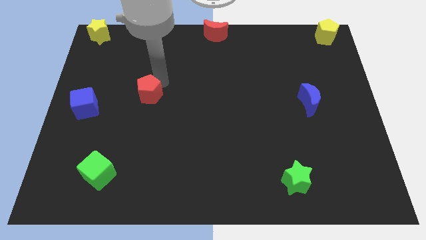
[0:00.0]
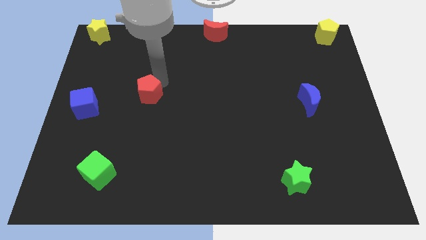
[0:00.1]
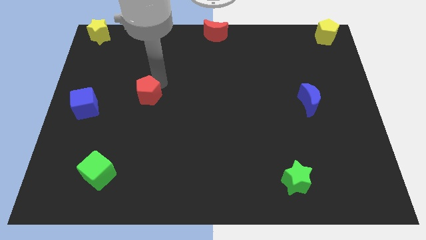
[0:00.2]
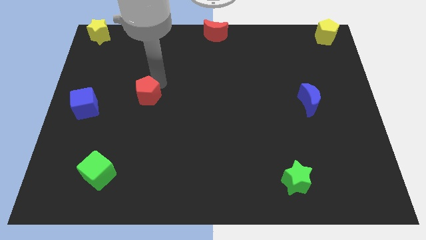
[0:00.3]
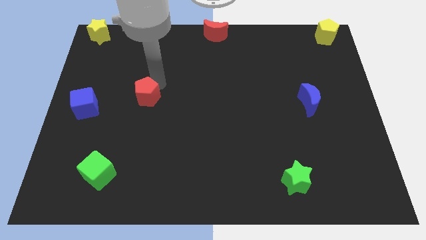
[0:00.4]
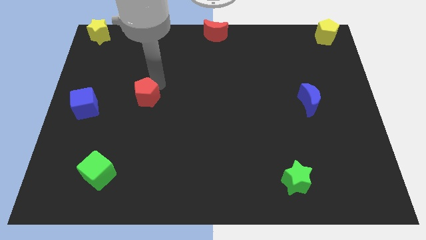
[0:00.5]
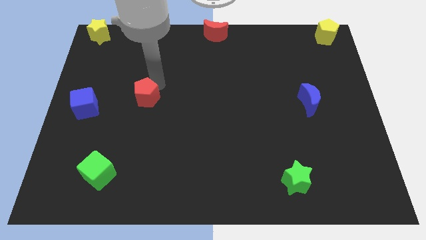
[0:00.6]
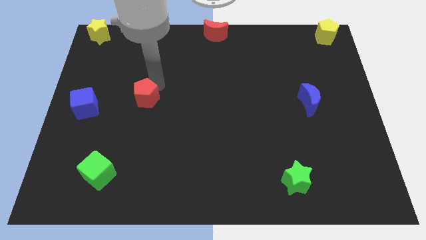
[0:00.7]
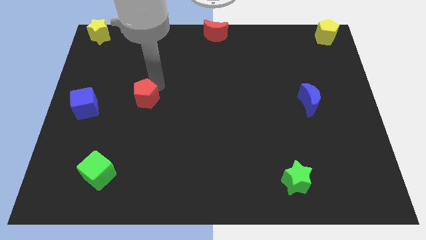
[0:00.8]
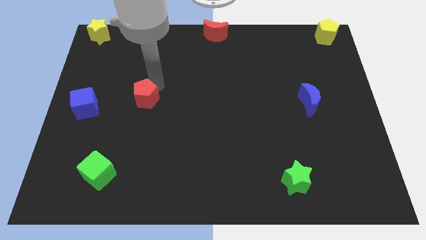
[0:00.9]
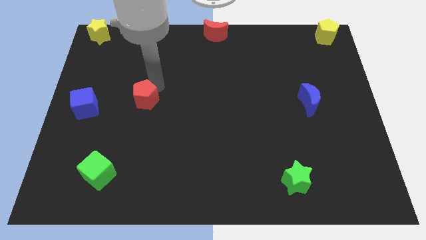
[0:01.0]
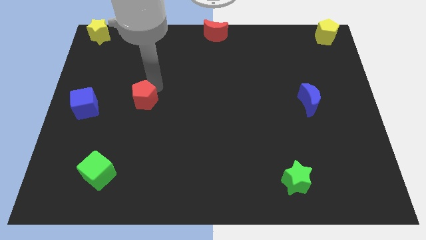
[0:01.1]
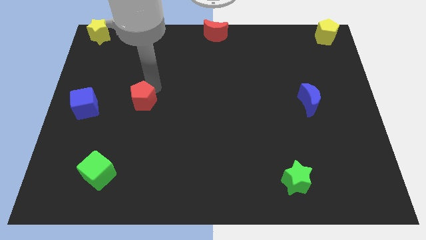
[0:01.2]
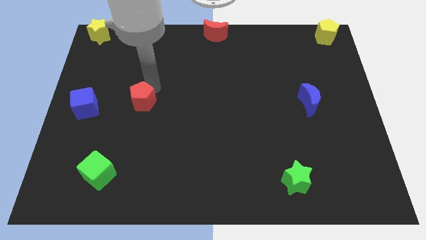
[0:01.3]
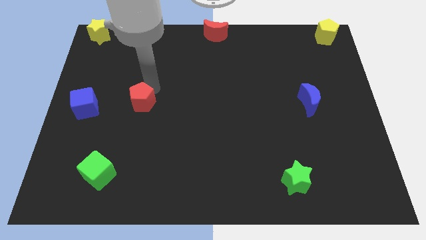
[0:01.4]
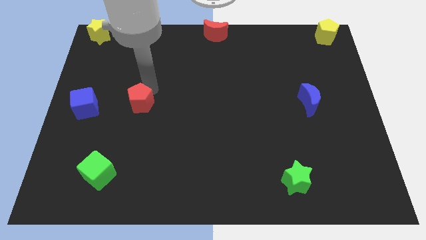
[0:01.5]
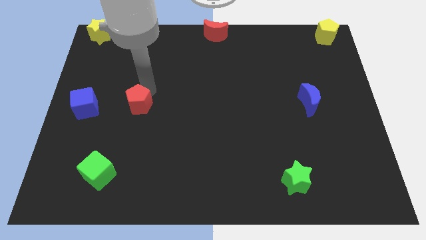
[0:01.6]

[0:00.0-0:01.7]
push the red pentagon to the right of the blue cube

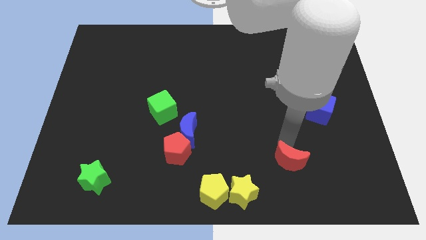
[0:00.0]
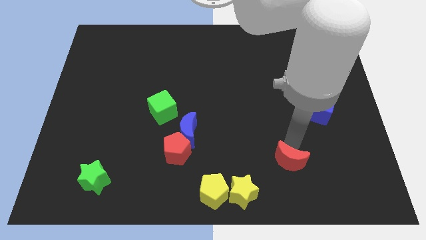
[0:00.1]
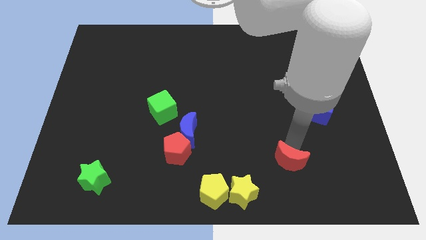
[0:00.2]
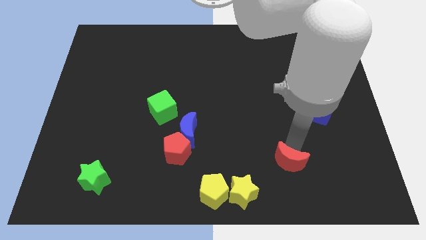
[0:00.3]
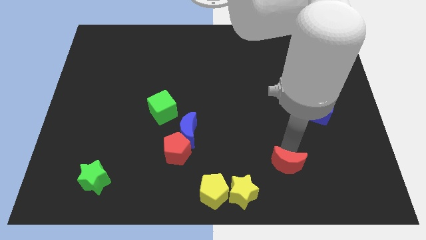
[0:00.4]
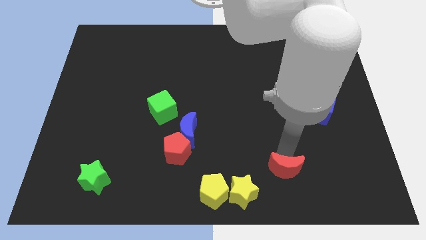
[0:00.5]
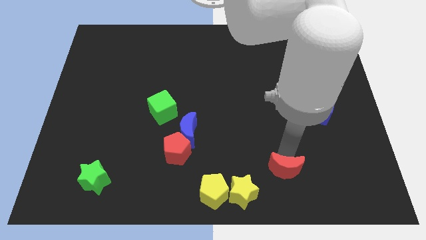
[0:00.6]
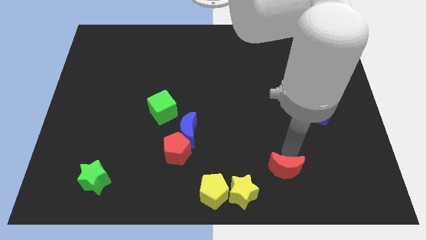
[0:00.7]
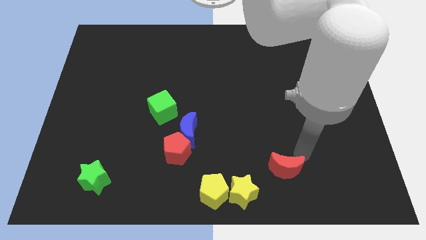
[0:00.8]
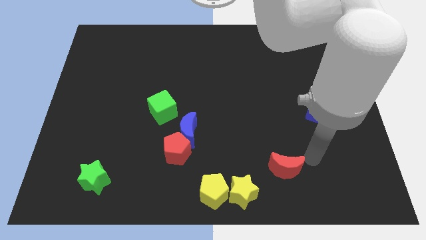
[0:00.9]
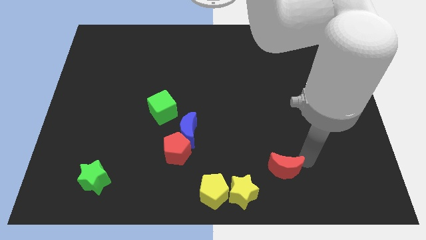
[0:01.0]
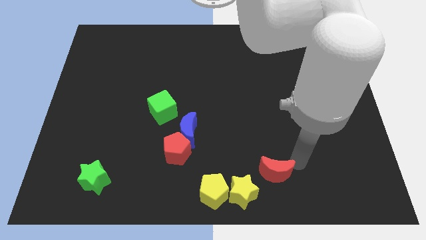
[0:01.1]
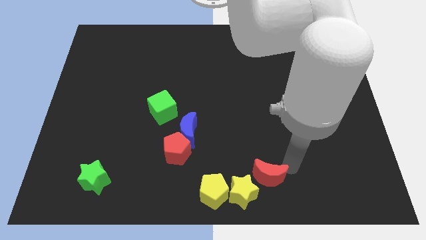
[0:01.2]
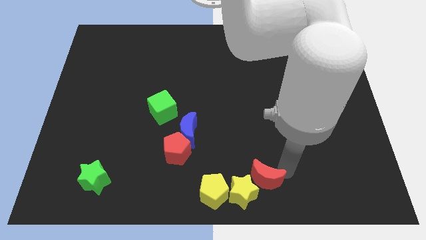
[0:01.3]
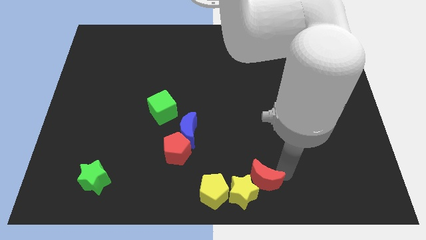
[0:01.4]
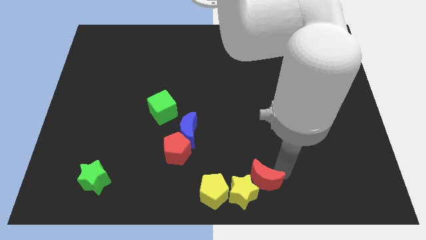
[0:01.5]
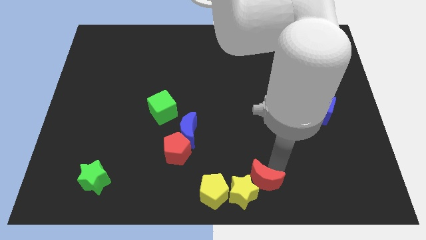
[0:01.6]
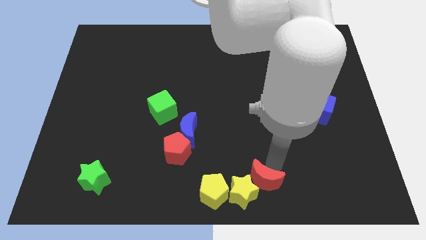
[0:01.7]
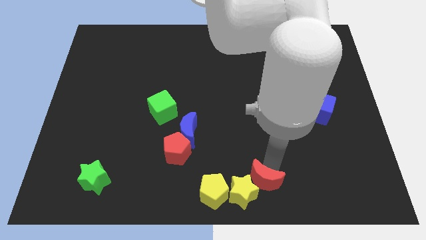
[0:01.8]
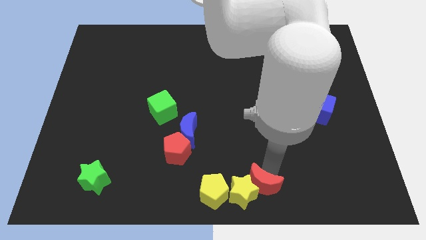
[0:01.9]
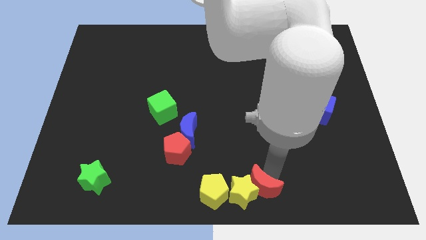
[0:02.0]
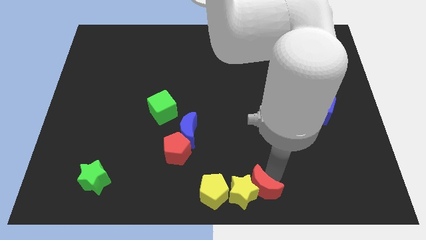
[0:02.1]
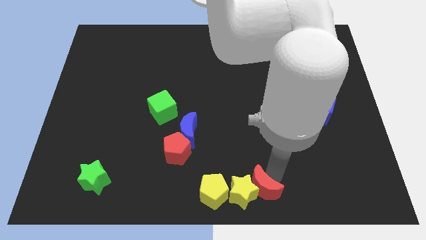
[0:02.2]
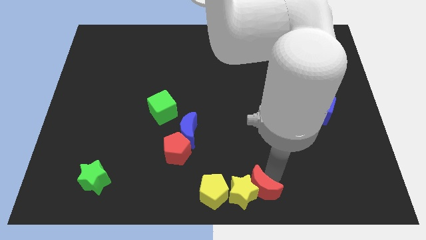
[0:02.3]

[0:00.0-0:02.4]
place the red moon right to the yellow star

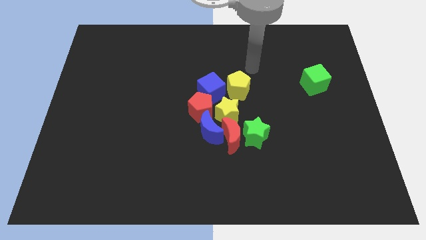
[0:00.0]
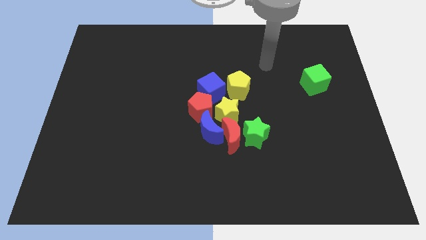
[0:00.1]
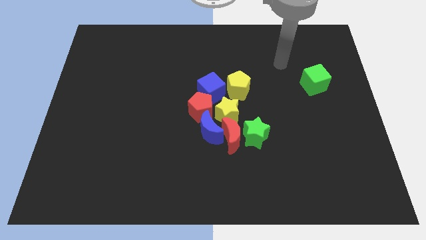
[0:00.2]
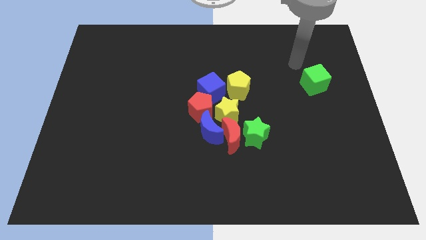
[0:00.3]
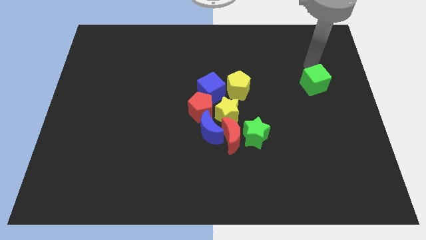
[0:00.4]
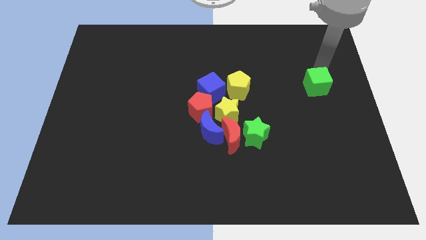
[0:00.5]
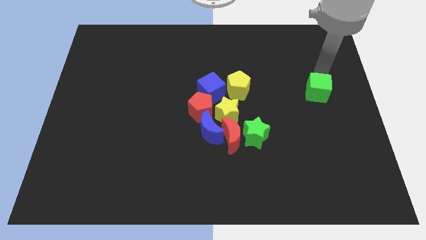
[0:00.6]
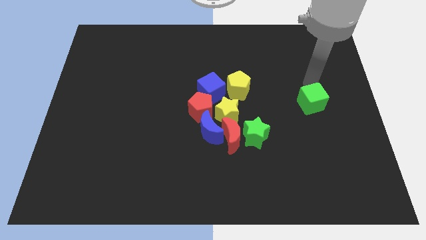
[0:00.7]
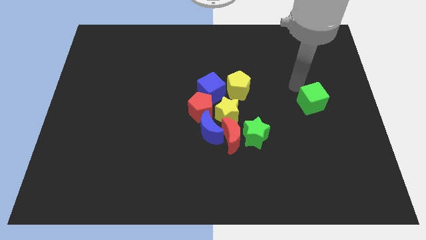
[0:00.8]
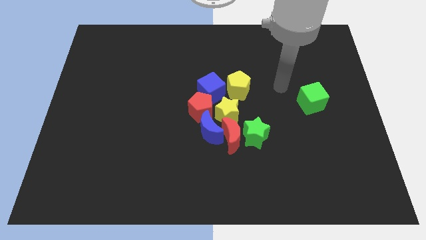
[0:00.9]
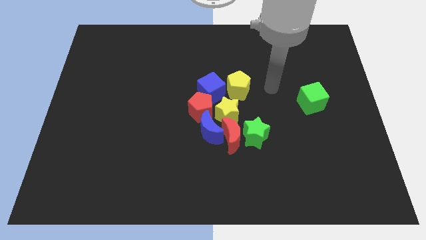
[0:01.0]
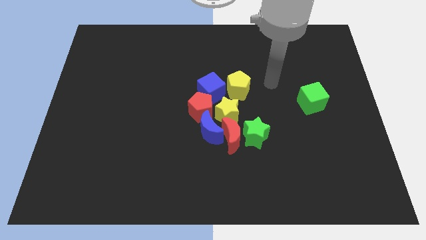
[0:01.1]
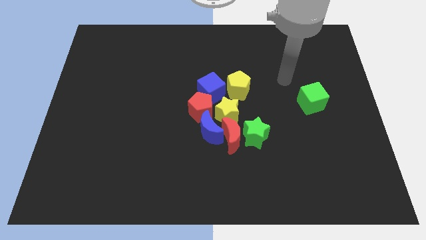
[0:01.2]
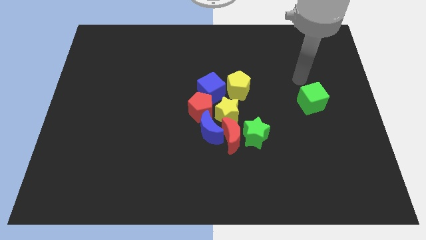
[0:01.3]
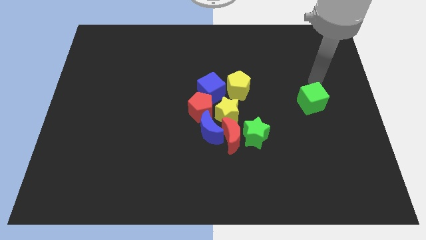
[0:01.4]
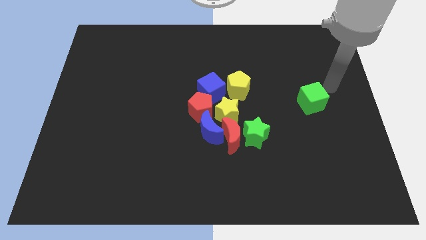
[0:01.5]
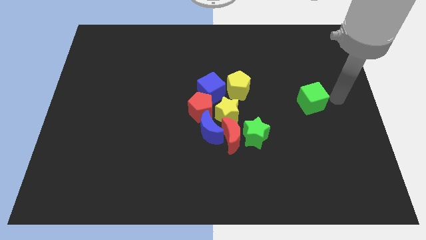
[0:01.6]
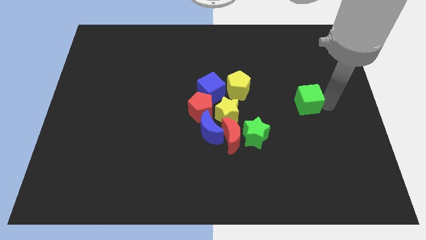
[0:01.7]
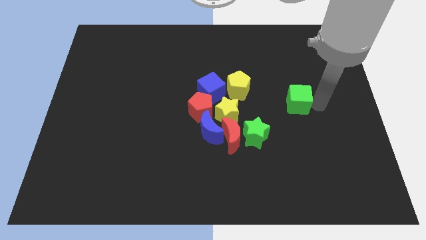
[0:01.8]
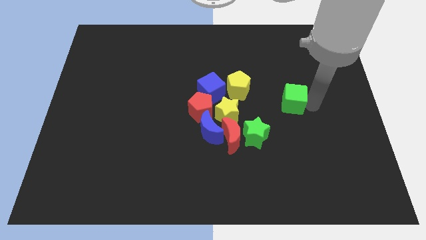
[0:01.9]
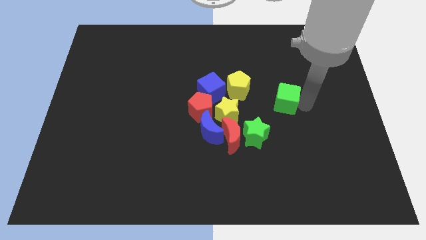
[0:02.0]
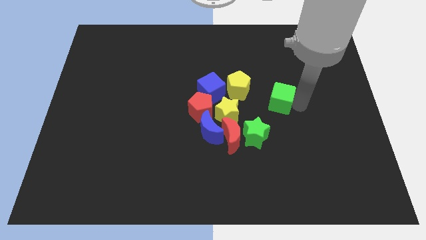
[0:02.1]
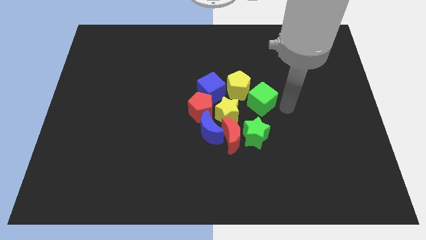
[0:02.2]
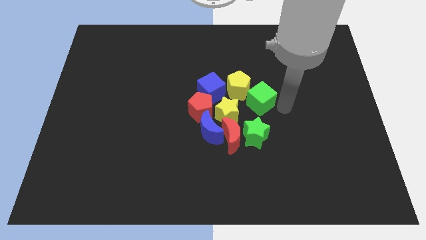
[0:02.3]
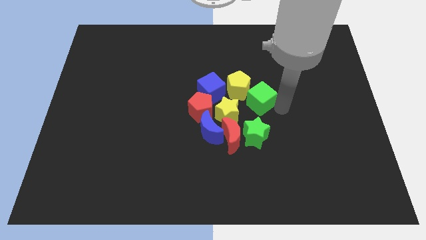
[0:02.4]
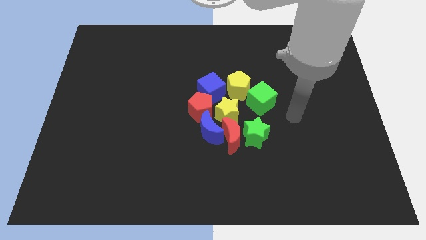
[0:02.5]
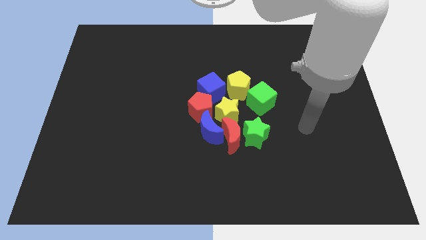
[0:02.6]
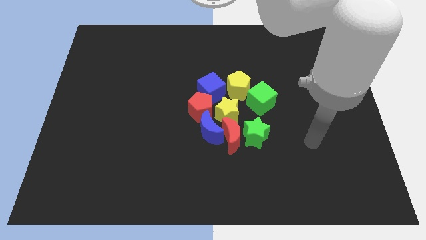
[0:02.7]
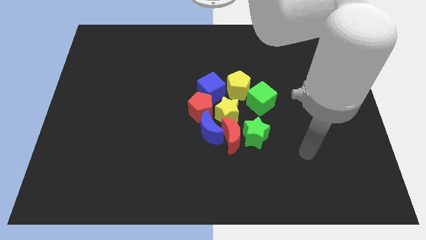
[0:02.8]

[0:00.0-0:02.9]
move the green cub e into the group of blocks

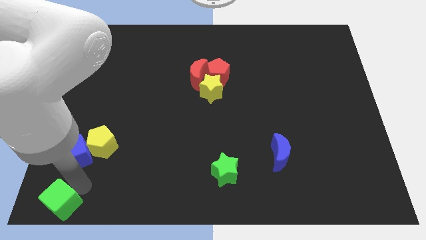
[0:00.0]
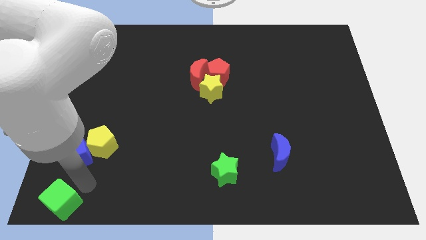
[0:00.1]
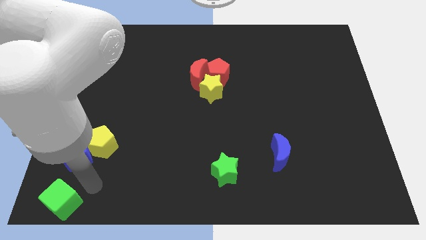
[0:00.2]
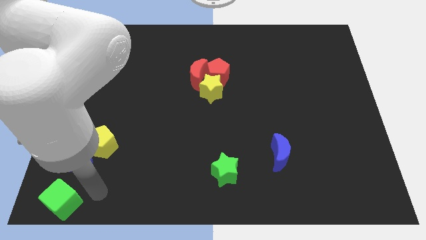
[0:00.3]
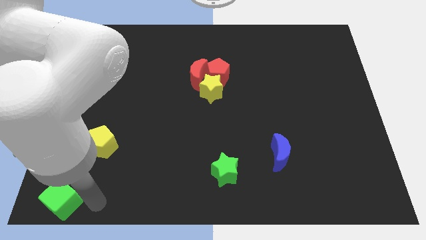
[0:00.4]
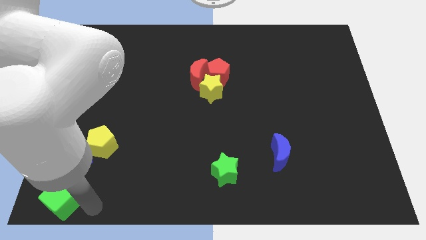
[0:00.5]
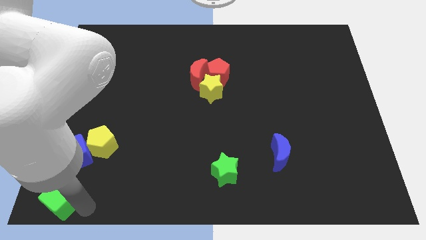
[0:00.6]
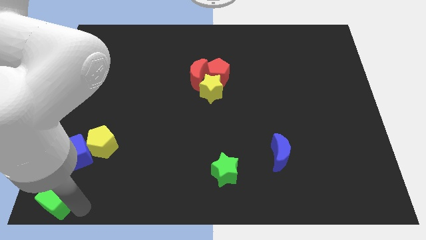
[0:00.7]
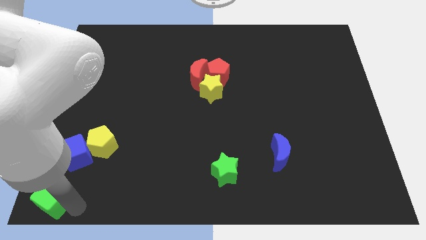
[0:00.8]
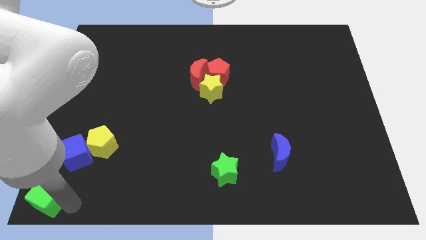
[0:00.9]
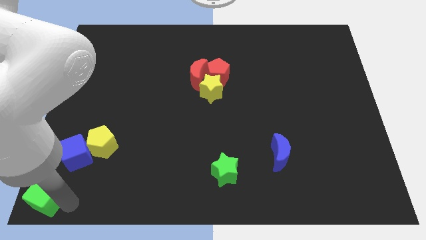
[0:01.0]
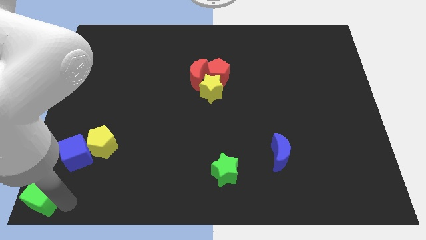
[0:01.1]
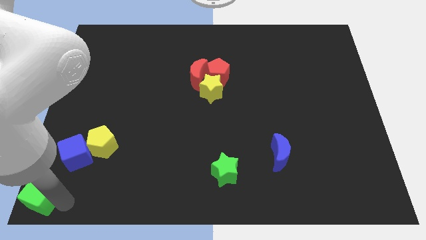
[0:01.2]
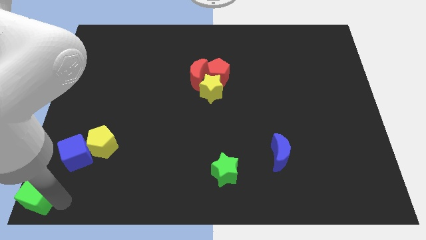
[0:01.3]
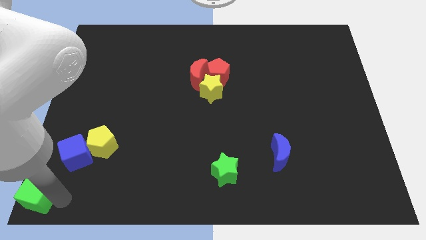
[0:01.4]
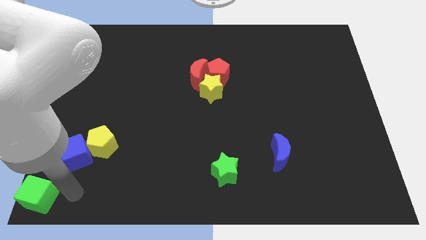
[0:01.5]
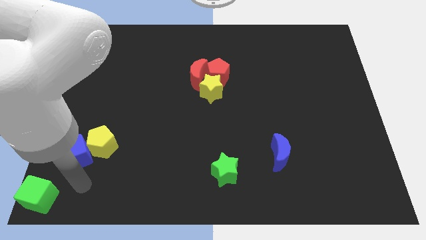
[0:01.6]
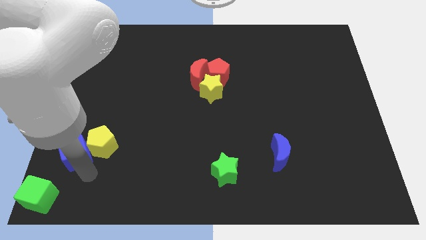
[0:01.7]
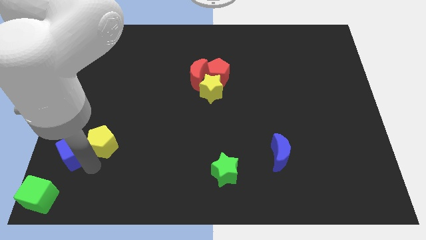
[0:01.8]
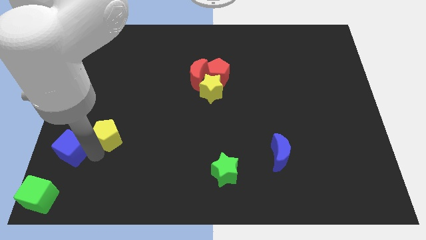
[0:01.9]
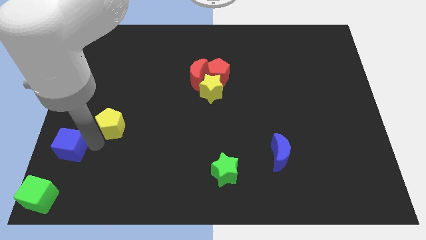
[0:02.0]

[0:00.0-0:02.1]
separate yellow pentagon from blue cube
